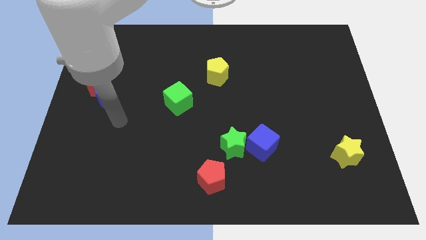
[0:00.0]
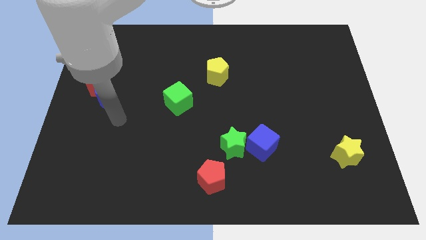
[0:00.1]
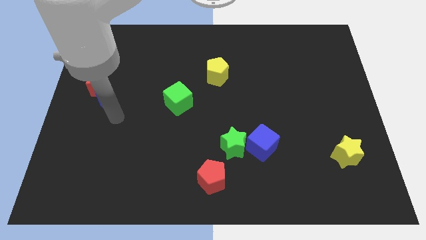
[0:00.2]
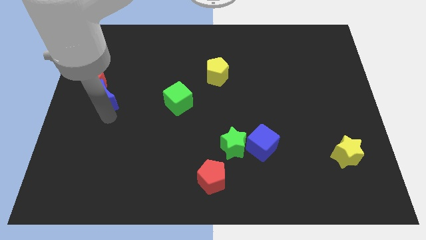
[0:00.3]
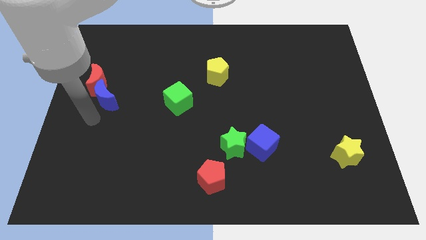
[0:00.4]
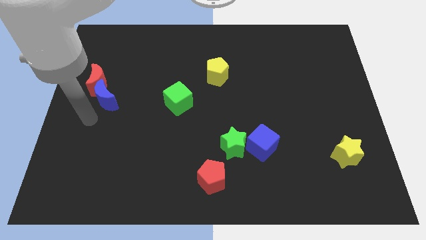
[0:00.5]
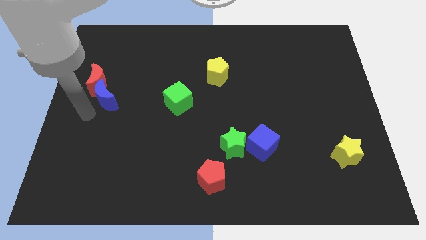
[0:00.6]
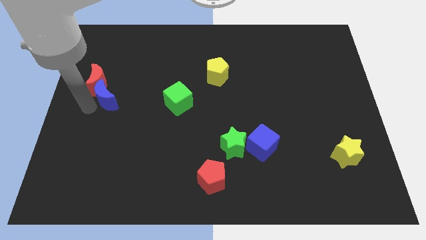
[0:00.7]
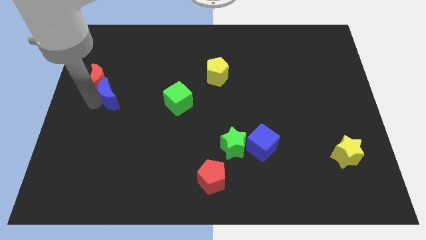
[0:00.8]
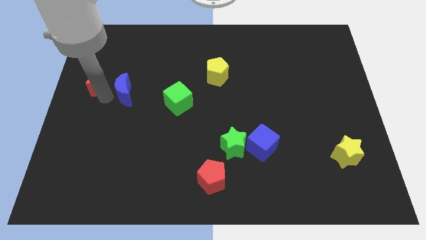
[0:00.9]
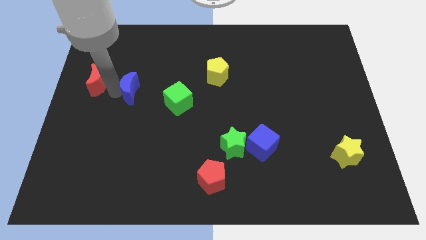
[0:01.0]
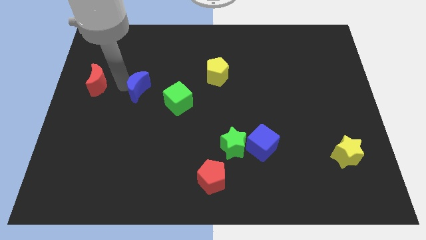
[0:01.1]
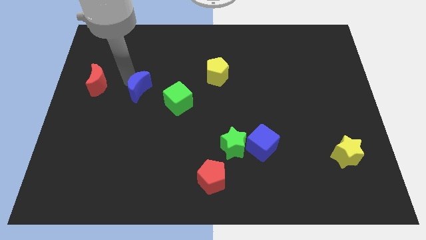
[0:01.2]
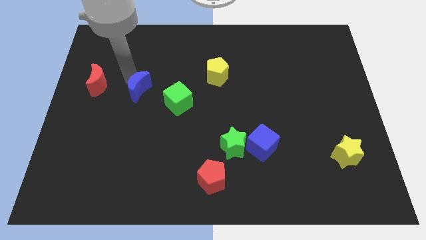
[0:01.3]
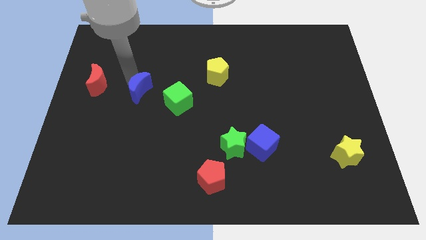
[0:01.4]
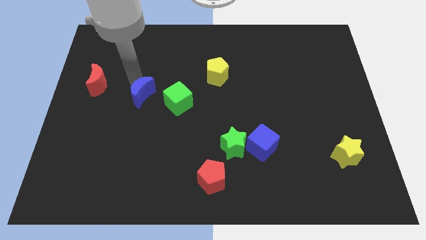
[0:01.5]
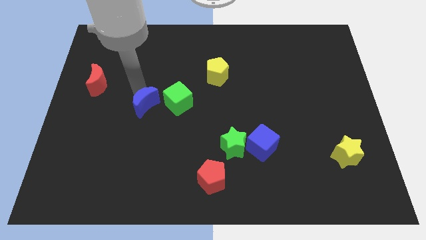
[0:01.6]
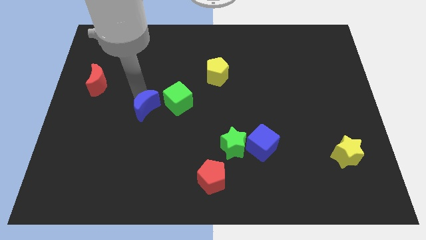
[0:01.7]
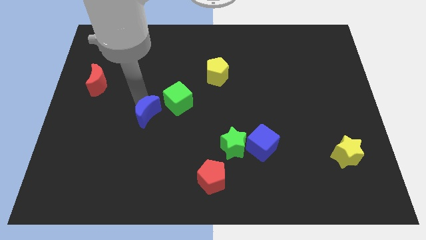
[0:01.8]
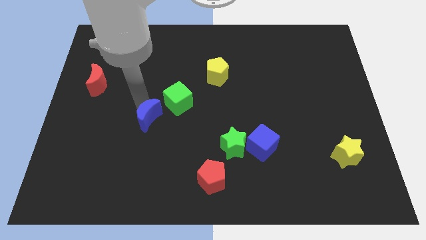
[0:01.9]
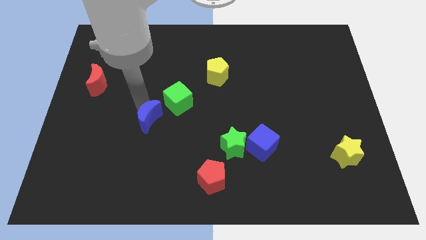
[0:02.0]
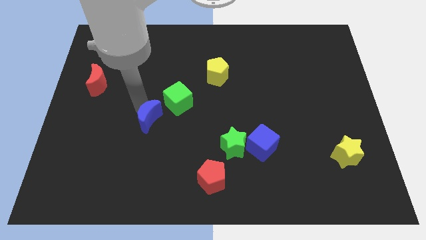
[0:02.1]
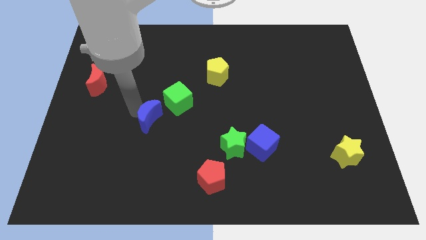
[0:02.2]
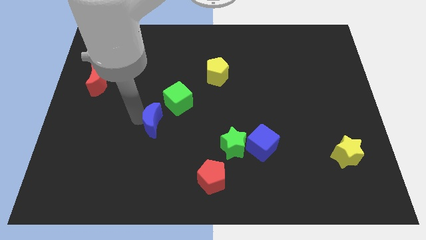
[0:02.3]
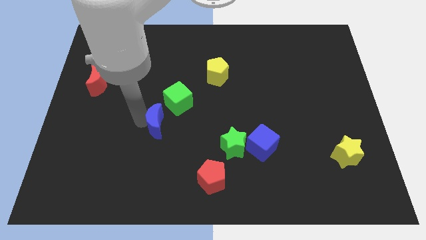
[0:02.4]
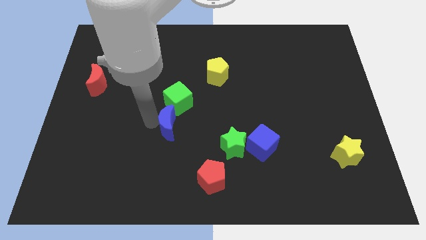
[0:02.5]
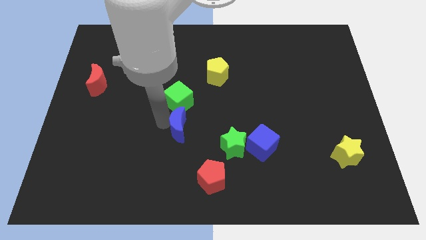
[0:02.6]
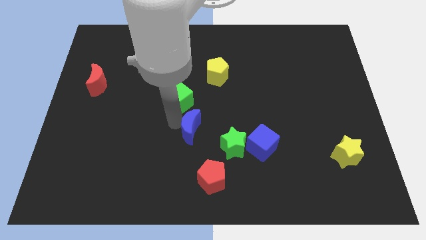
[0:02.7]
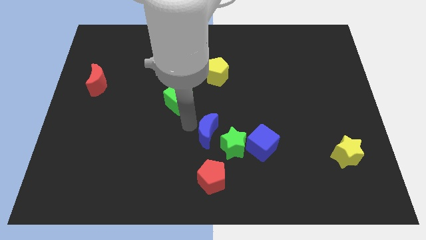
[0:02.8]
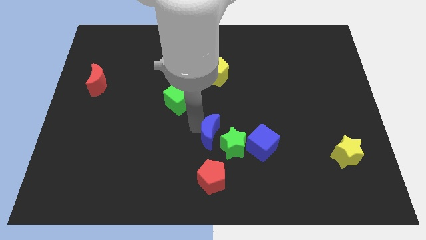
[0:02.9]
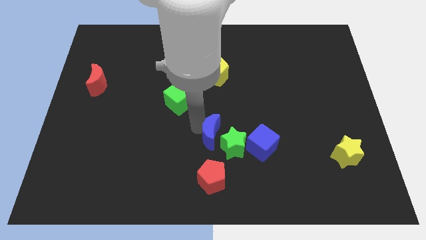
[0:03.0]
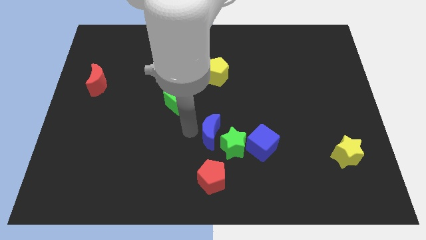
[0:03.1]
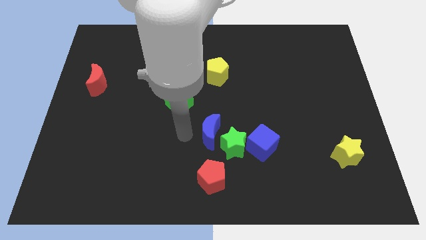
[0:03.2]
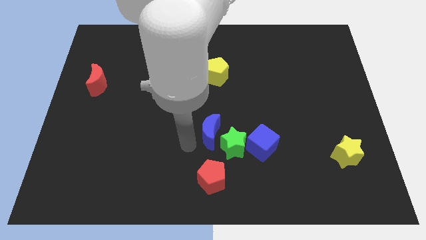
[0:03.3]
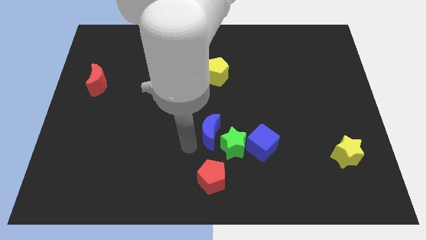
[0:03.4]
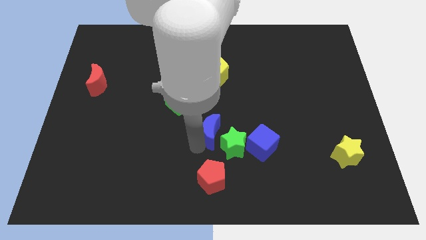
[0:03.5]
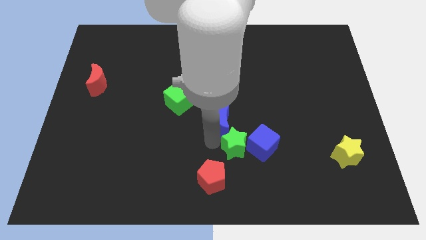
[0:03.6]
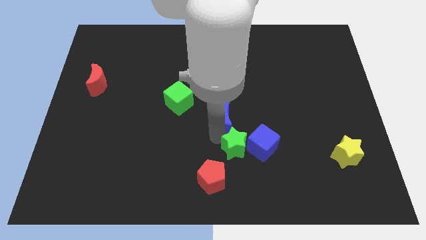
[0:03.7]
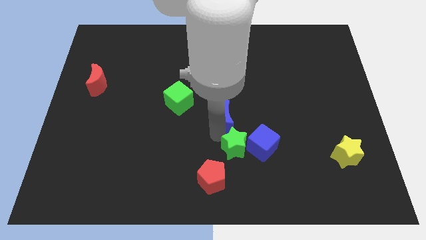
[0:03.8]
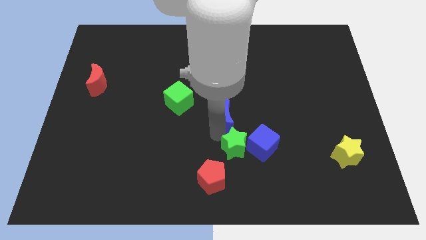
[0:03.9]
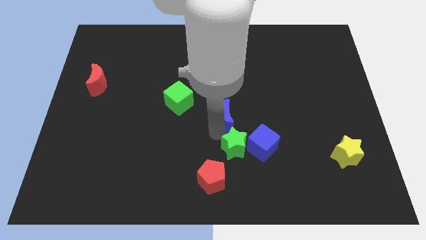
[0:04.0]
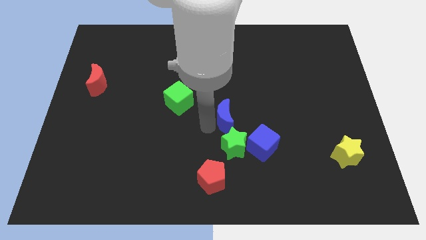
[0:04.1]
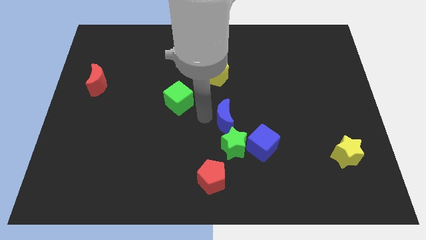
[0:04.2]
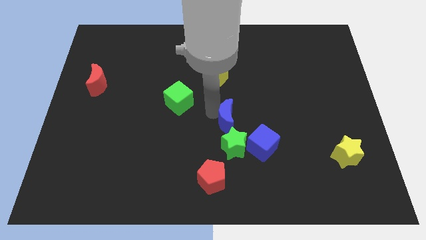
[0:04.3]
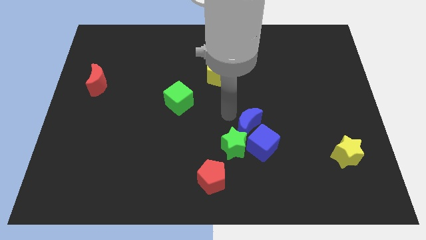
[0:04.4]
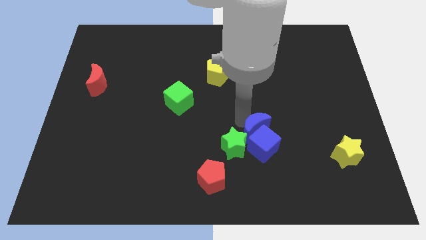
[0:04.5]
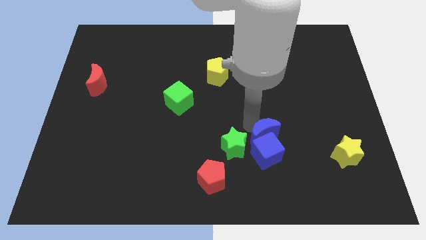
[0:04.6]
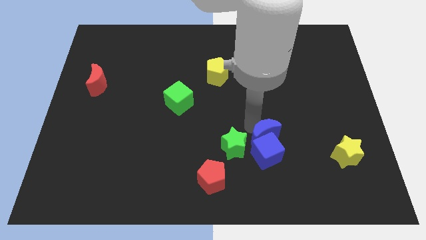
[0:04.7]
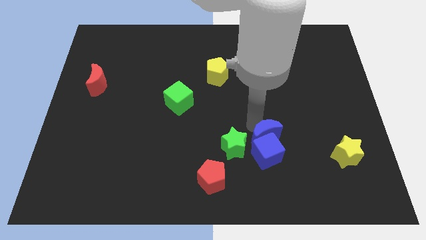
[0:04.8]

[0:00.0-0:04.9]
move the blue moon top left to the center of blue cube

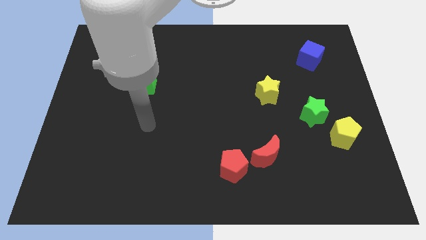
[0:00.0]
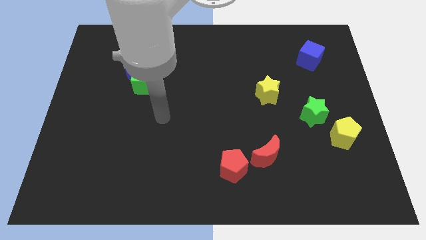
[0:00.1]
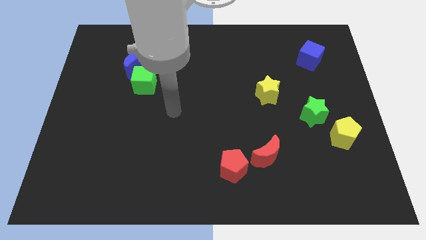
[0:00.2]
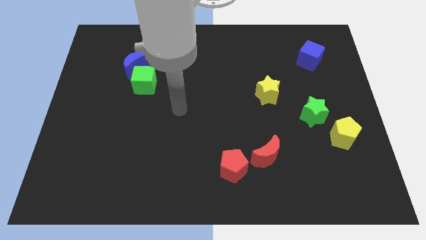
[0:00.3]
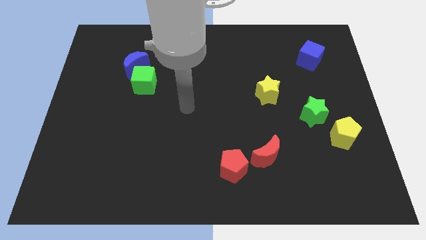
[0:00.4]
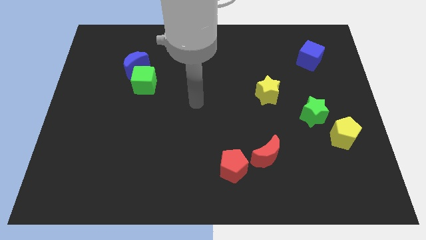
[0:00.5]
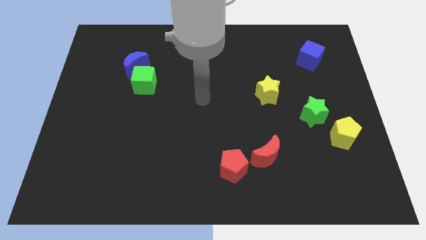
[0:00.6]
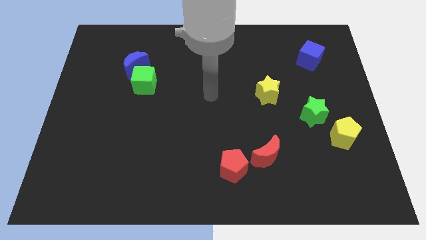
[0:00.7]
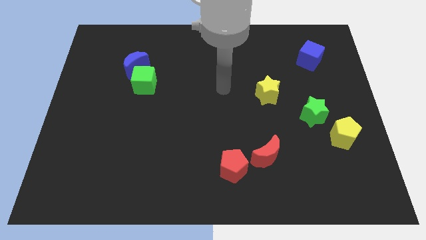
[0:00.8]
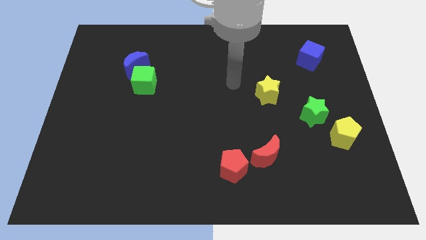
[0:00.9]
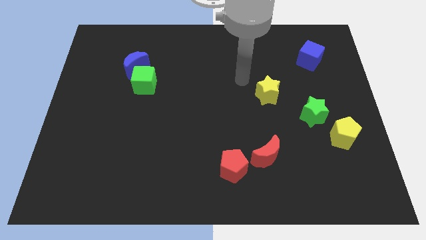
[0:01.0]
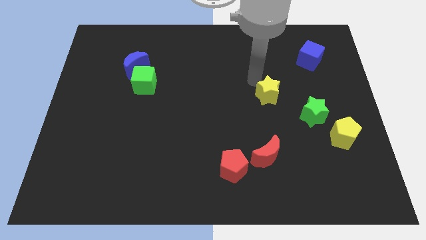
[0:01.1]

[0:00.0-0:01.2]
move the arm near the yellow star

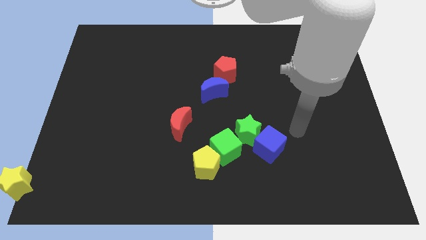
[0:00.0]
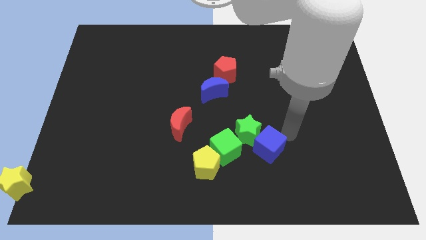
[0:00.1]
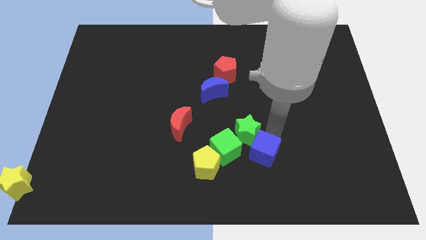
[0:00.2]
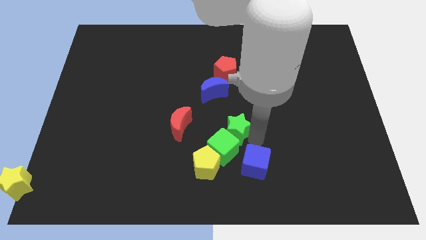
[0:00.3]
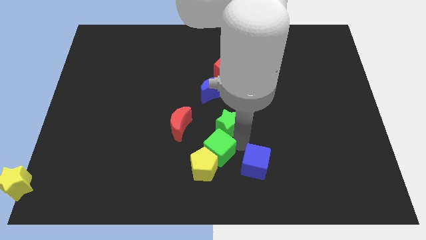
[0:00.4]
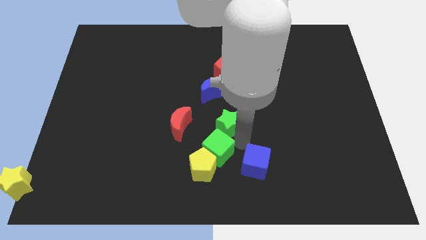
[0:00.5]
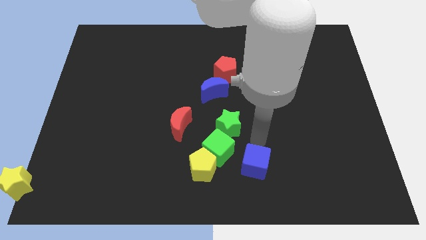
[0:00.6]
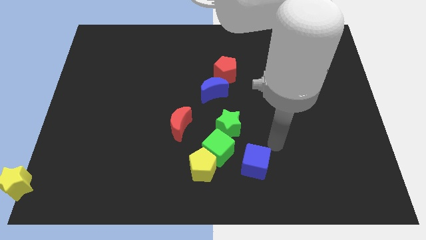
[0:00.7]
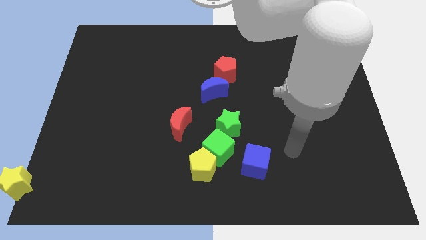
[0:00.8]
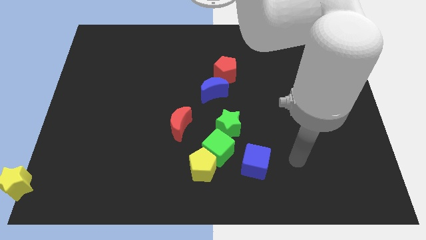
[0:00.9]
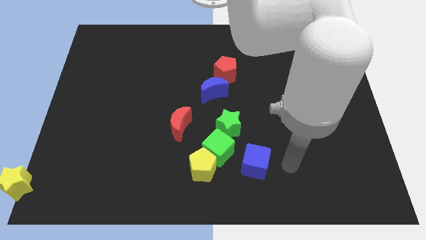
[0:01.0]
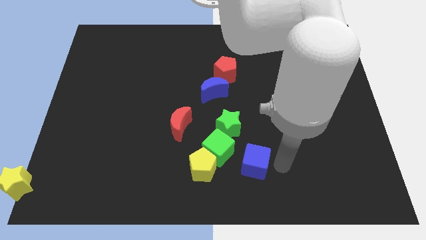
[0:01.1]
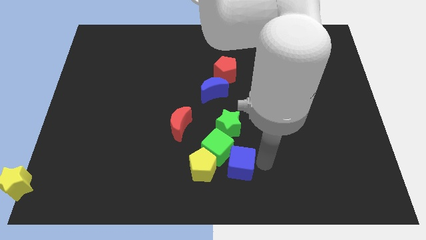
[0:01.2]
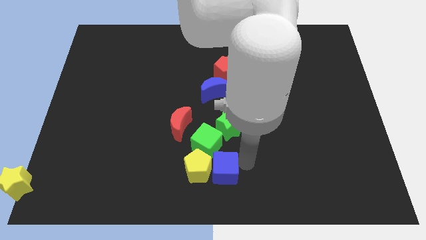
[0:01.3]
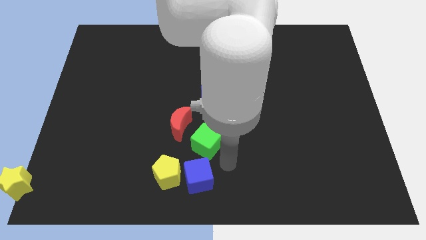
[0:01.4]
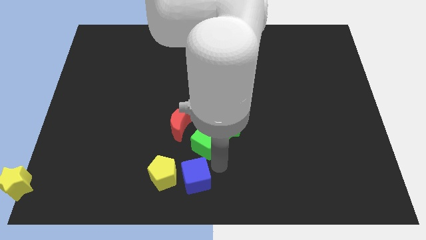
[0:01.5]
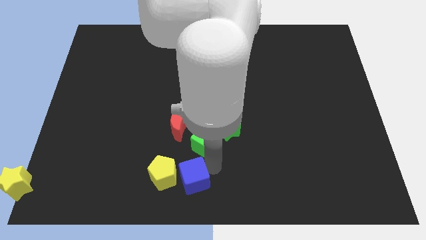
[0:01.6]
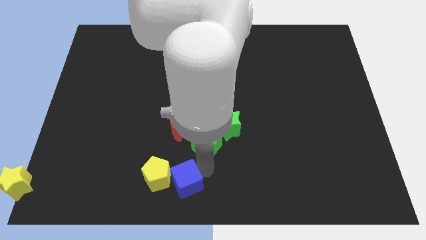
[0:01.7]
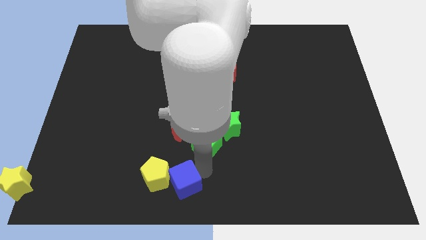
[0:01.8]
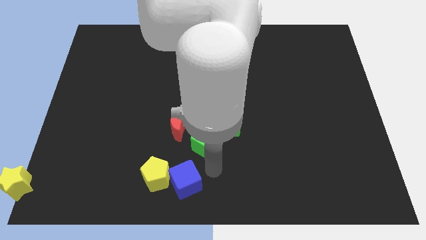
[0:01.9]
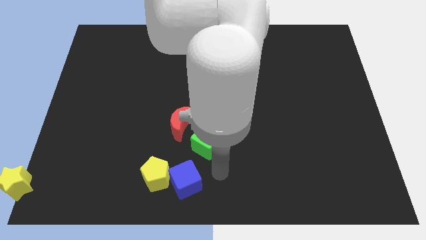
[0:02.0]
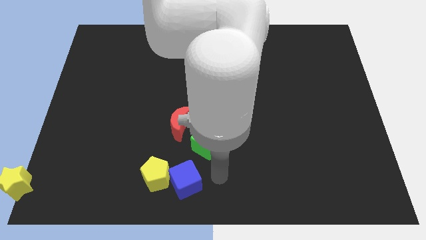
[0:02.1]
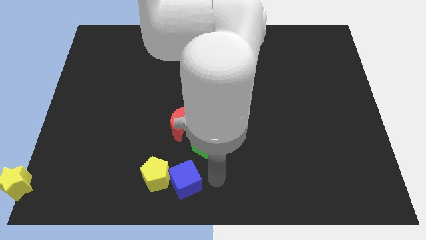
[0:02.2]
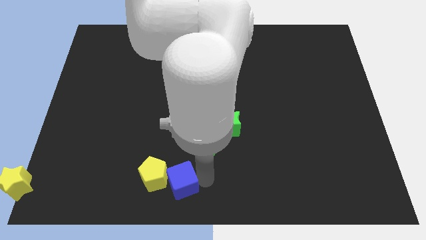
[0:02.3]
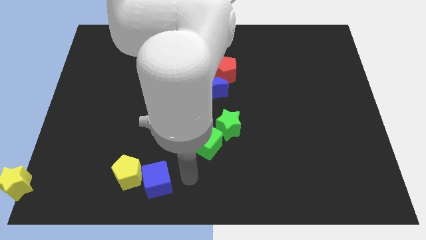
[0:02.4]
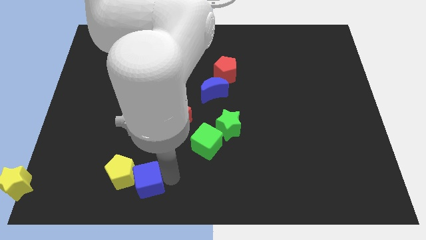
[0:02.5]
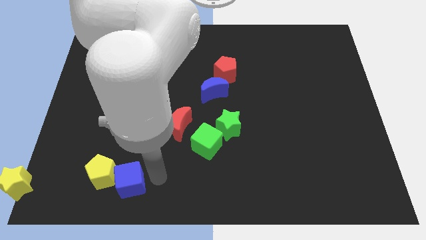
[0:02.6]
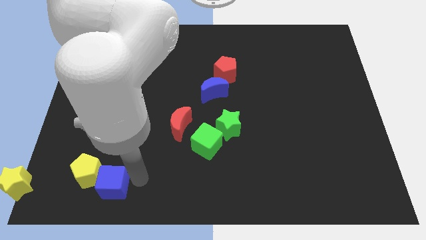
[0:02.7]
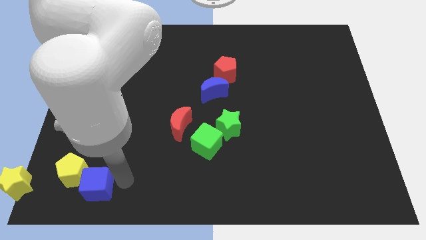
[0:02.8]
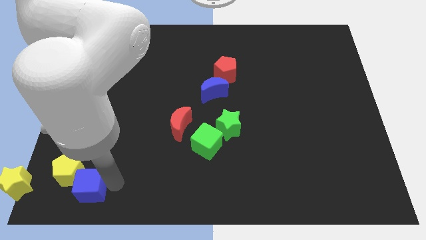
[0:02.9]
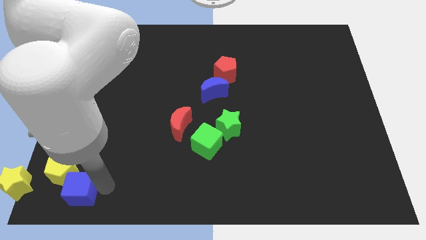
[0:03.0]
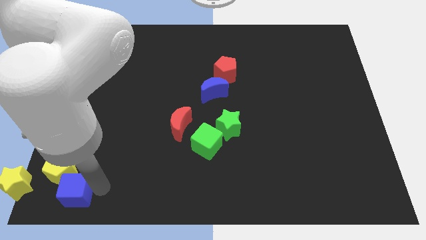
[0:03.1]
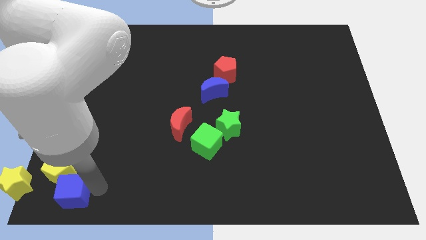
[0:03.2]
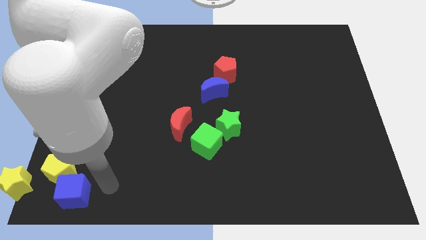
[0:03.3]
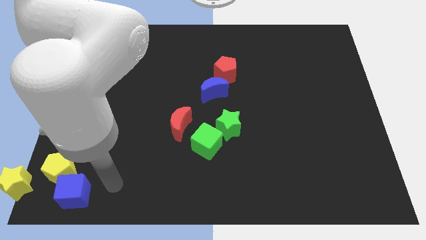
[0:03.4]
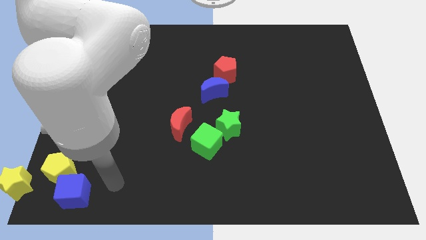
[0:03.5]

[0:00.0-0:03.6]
push the blue cube along with the yellow pentagon towards the yellow star
